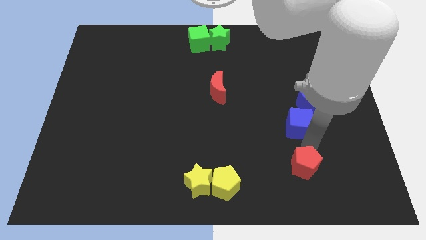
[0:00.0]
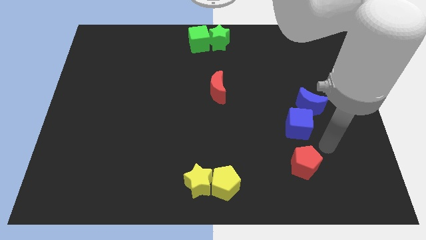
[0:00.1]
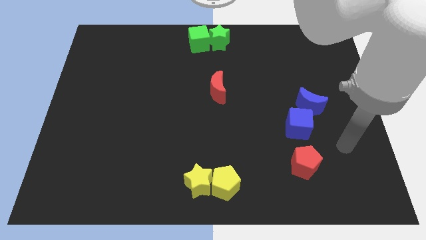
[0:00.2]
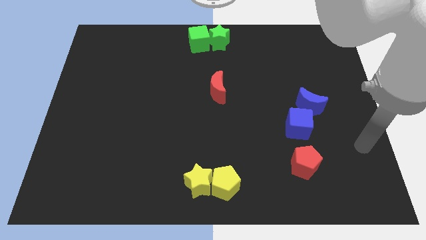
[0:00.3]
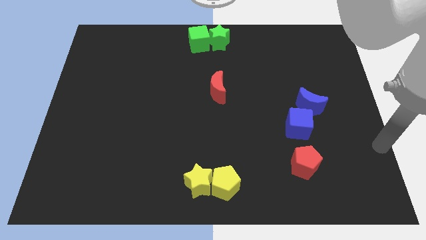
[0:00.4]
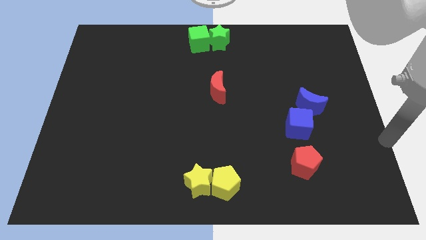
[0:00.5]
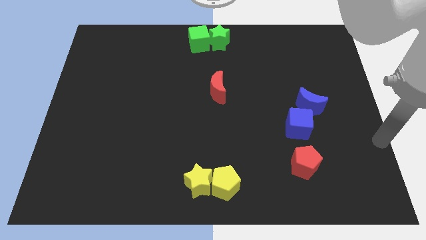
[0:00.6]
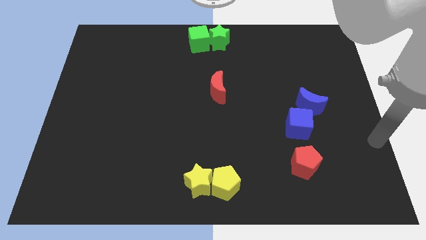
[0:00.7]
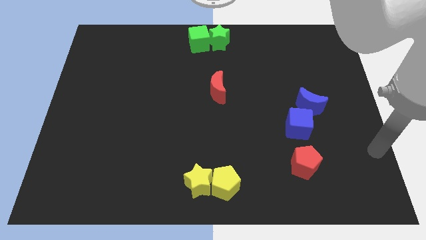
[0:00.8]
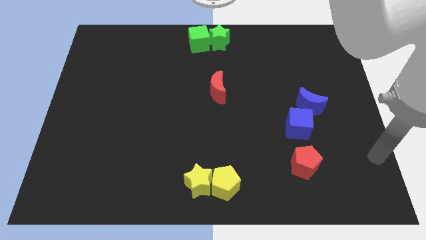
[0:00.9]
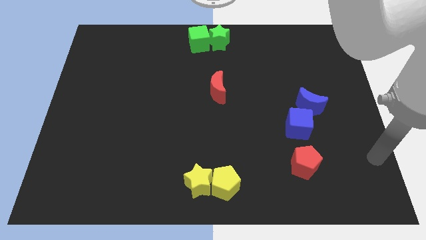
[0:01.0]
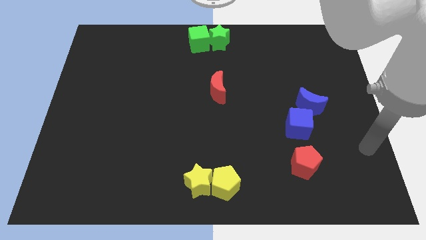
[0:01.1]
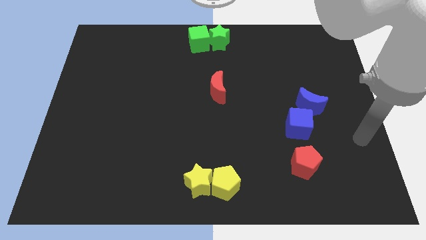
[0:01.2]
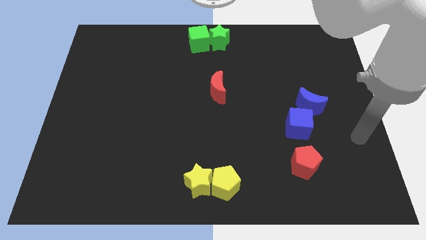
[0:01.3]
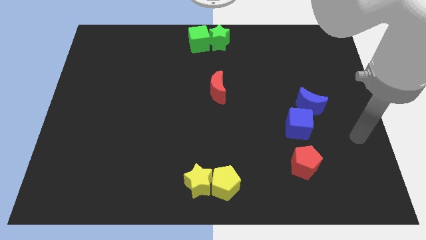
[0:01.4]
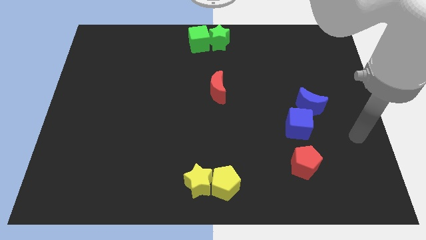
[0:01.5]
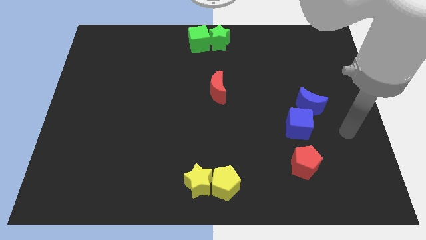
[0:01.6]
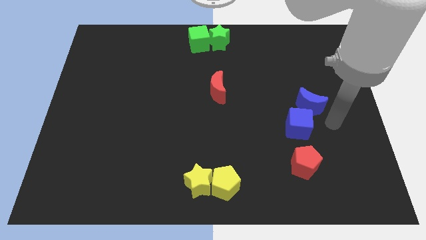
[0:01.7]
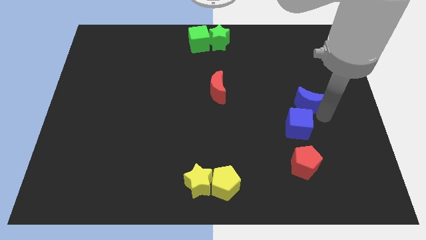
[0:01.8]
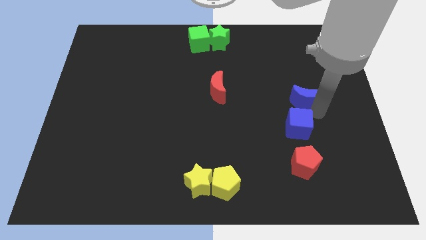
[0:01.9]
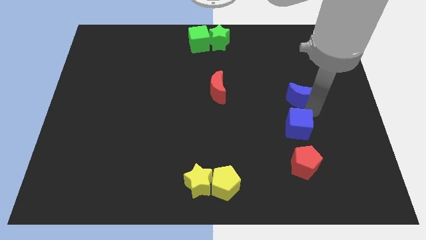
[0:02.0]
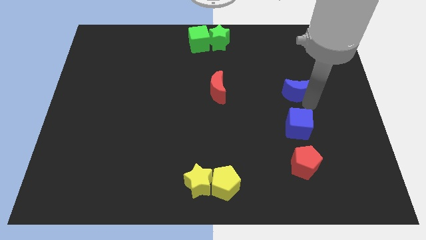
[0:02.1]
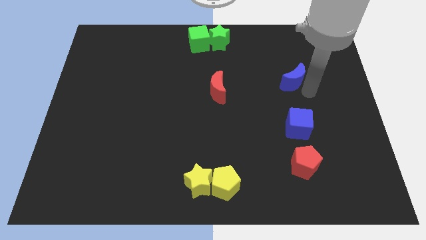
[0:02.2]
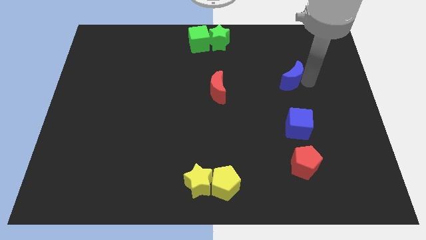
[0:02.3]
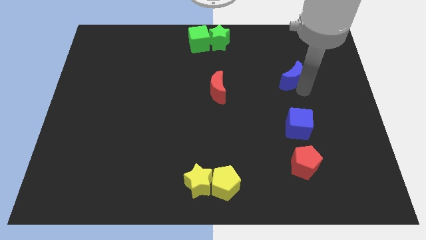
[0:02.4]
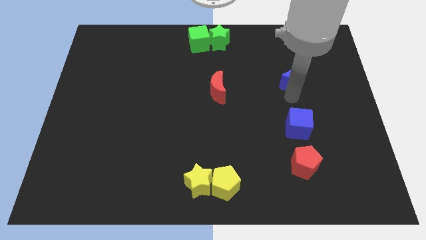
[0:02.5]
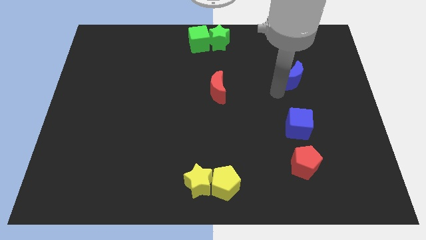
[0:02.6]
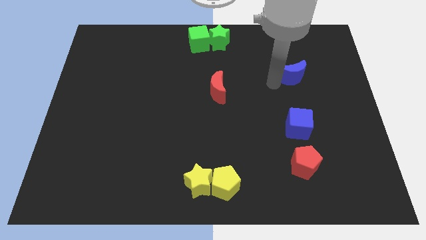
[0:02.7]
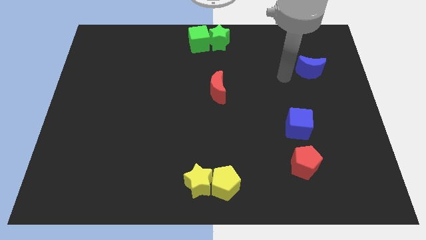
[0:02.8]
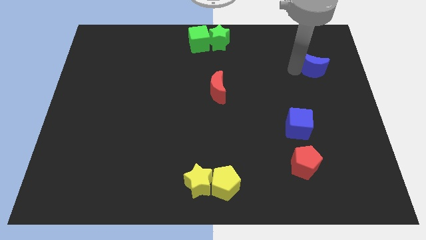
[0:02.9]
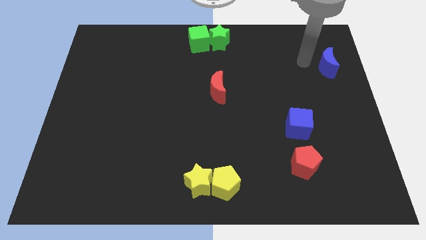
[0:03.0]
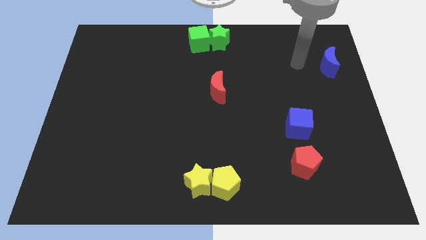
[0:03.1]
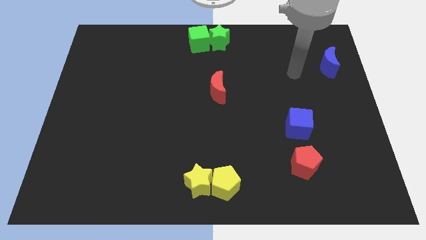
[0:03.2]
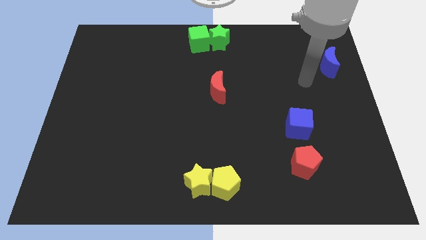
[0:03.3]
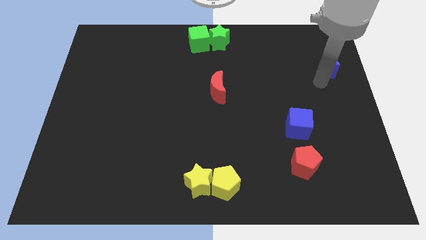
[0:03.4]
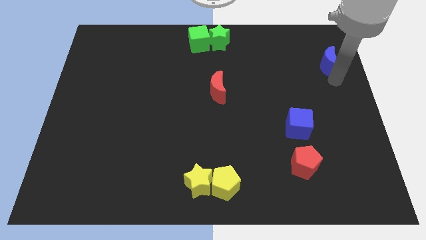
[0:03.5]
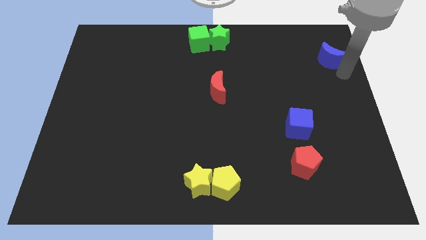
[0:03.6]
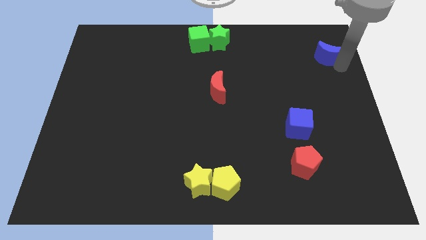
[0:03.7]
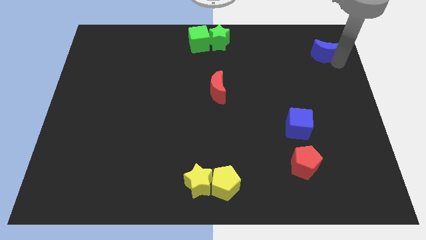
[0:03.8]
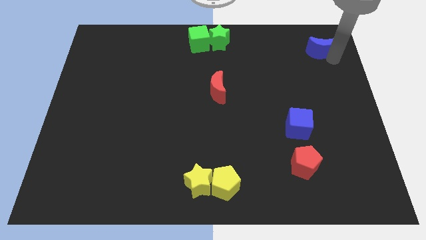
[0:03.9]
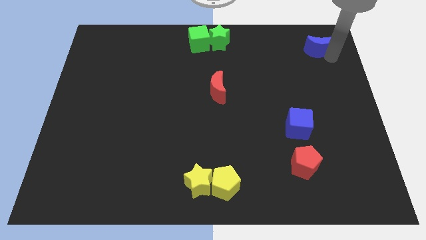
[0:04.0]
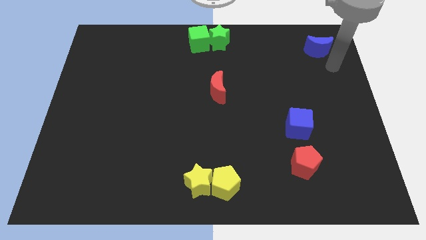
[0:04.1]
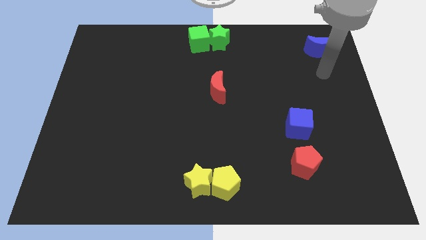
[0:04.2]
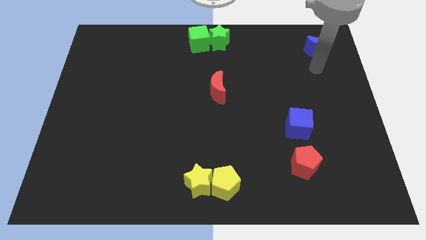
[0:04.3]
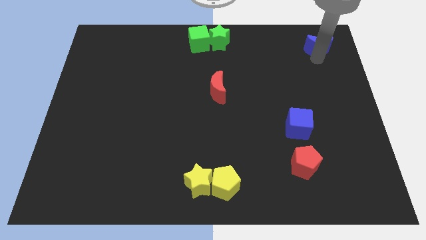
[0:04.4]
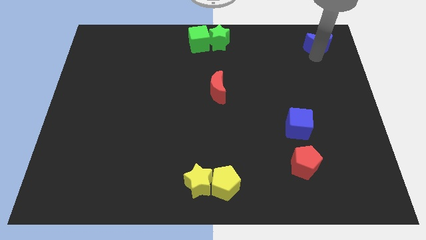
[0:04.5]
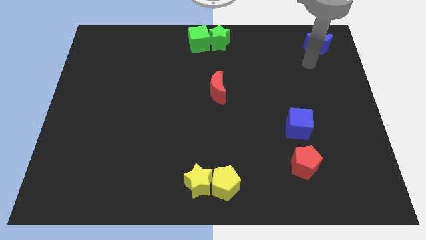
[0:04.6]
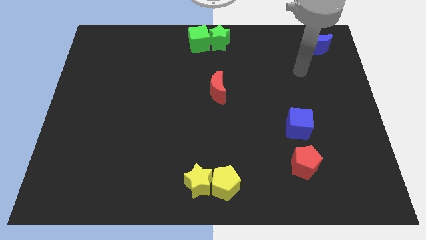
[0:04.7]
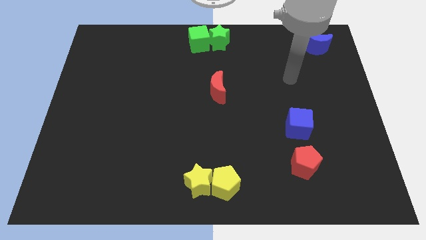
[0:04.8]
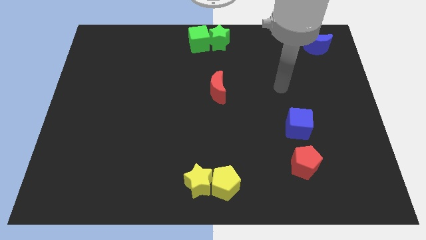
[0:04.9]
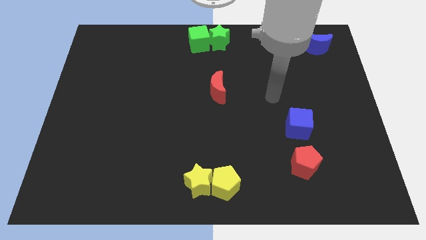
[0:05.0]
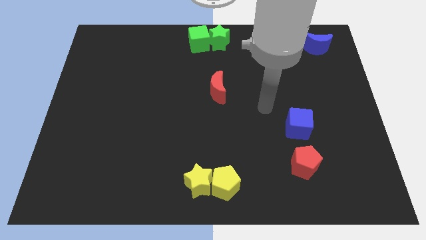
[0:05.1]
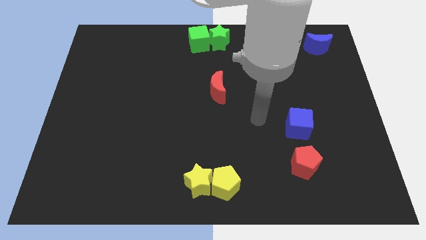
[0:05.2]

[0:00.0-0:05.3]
move the blue crescent to the top right of the board

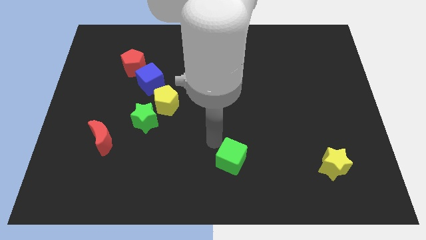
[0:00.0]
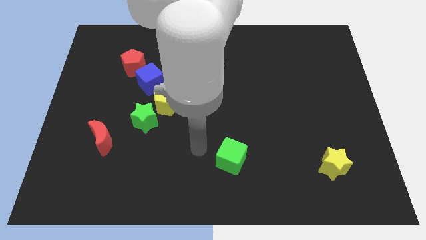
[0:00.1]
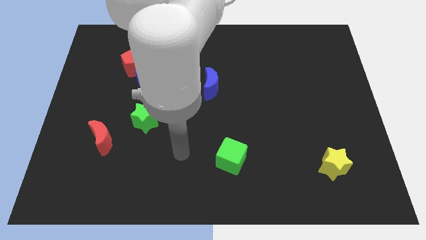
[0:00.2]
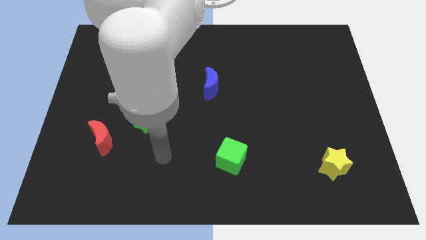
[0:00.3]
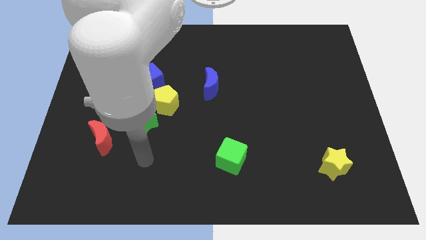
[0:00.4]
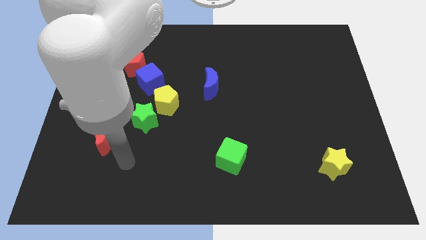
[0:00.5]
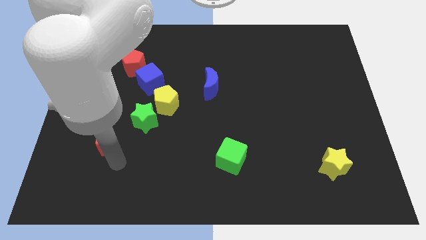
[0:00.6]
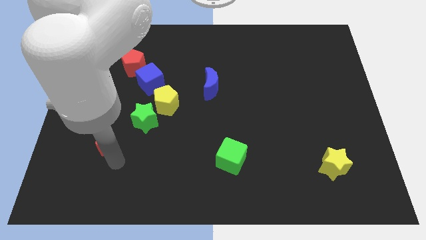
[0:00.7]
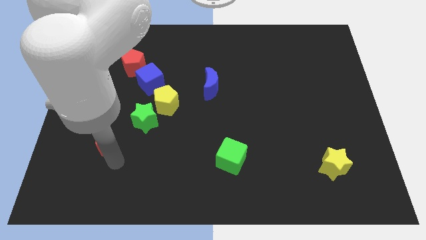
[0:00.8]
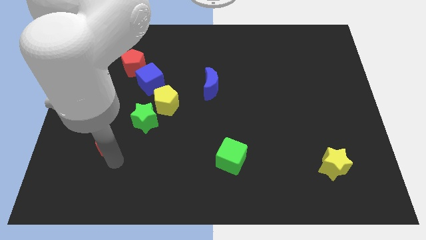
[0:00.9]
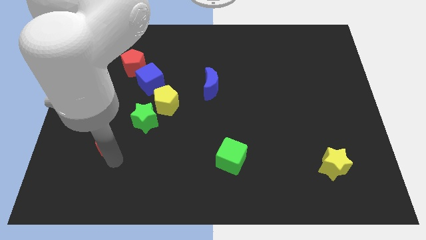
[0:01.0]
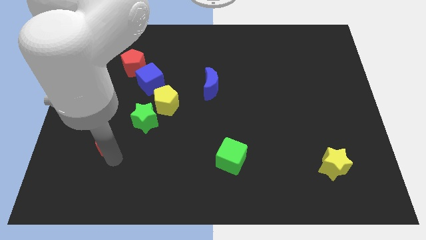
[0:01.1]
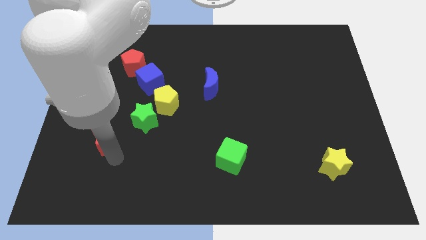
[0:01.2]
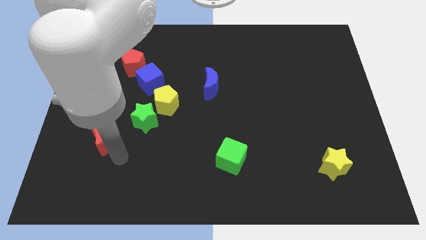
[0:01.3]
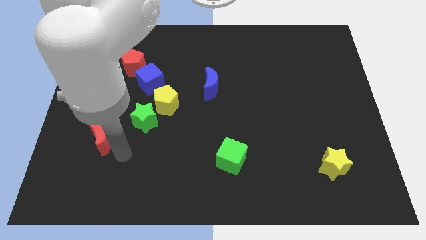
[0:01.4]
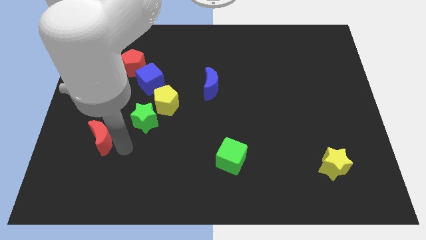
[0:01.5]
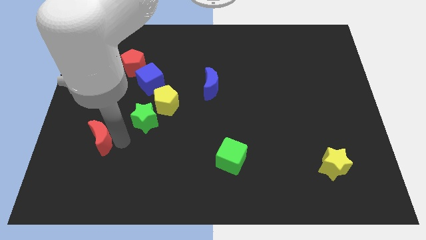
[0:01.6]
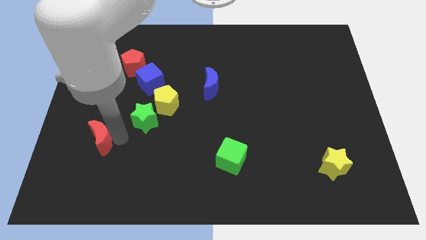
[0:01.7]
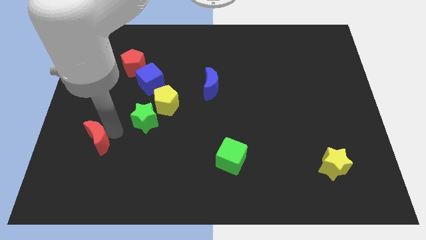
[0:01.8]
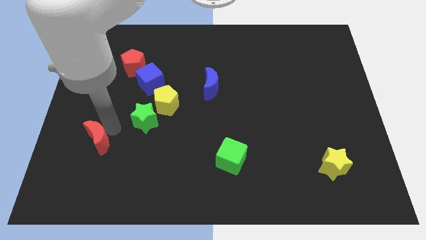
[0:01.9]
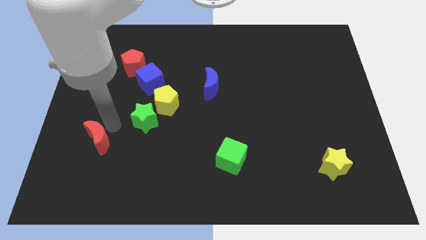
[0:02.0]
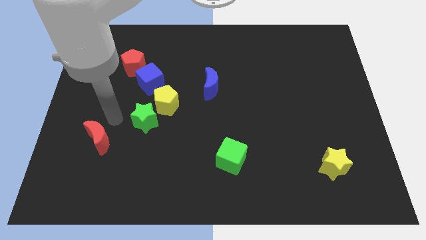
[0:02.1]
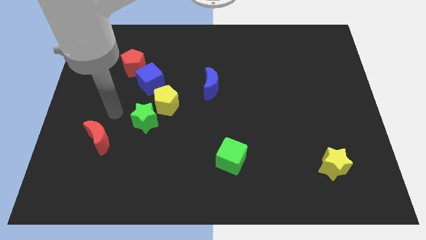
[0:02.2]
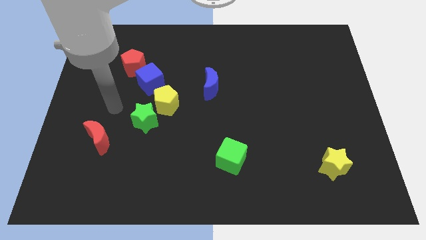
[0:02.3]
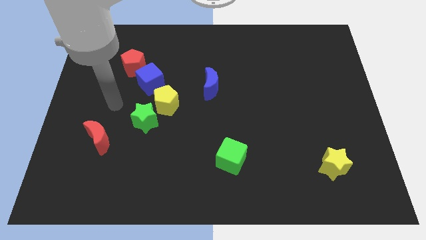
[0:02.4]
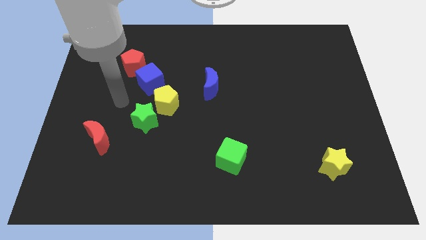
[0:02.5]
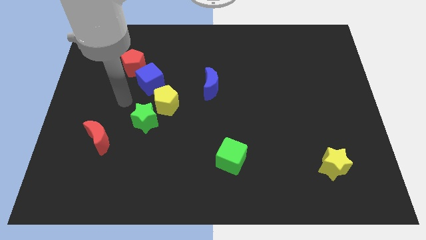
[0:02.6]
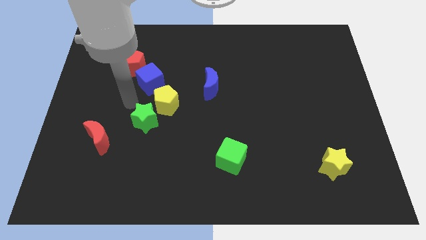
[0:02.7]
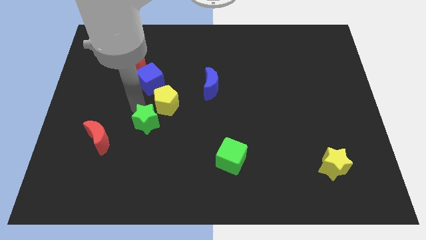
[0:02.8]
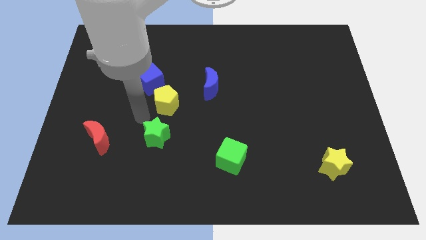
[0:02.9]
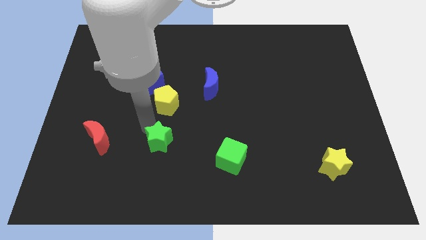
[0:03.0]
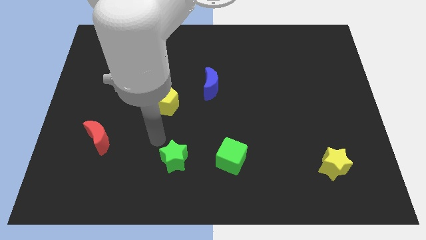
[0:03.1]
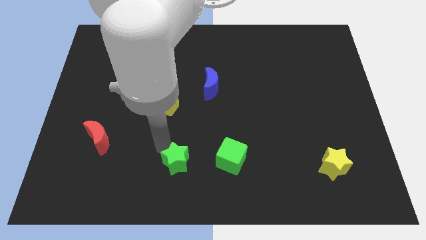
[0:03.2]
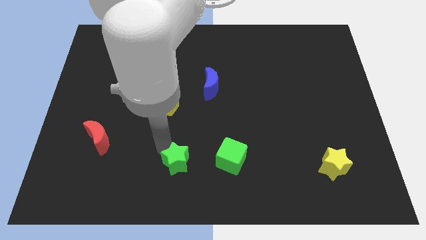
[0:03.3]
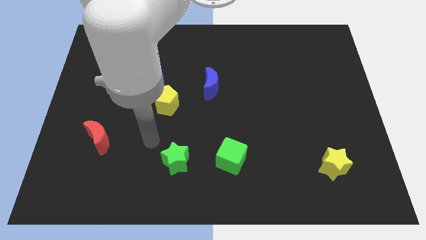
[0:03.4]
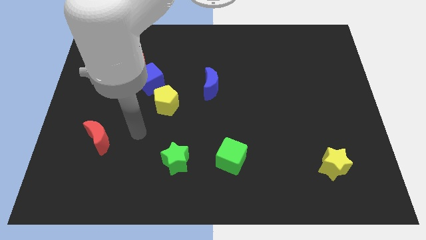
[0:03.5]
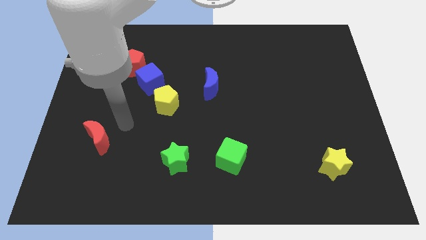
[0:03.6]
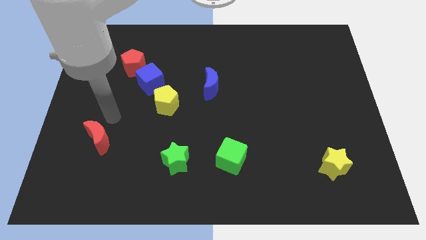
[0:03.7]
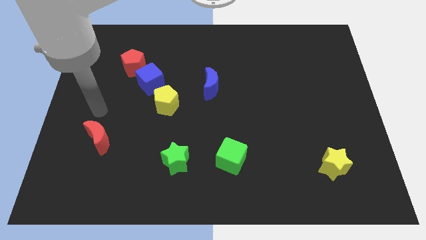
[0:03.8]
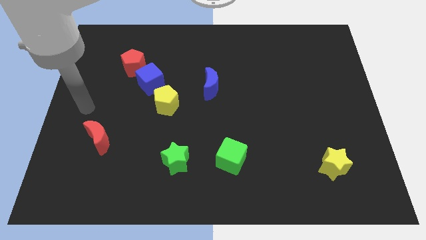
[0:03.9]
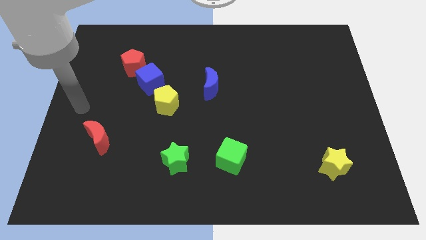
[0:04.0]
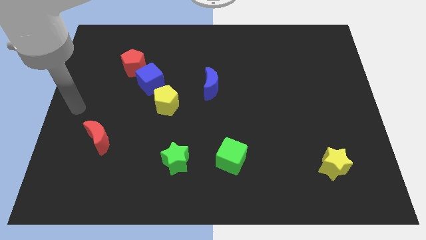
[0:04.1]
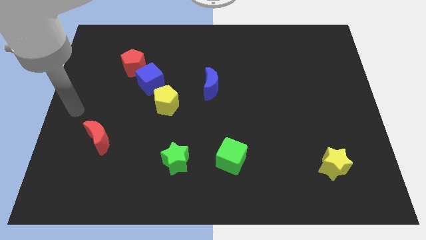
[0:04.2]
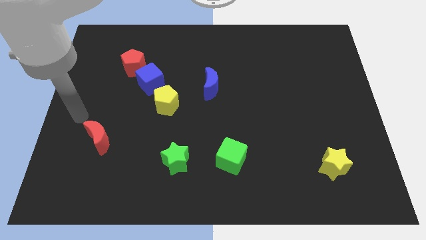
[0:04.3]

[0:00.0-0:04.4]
push the green star
